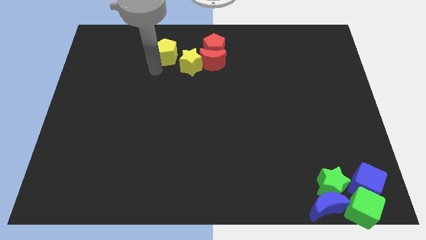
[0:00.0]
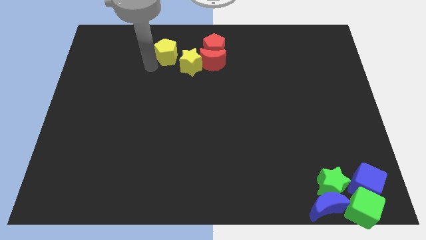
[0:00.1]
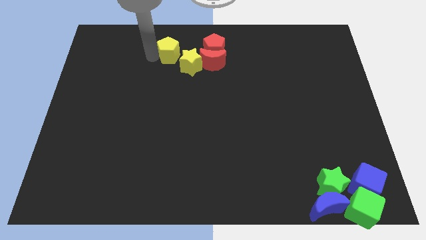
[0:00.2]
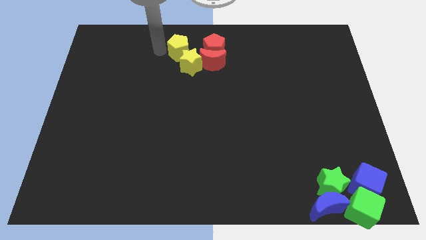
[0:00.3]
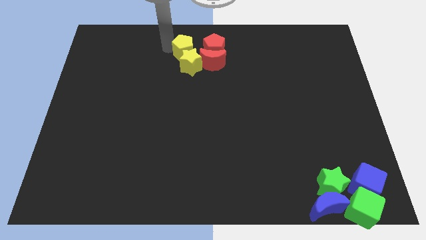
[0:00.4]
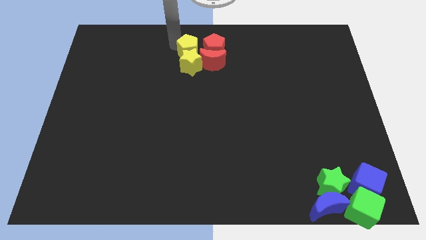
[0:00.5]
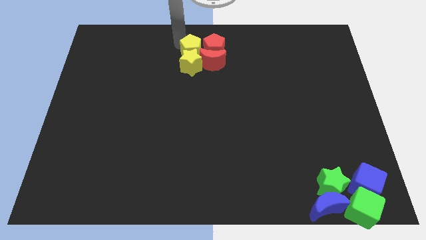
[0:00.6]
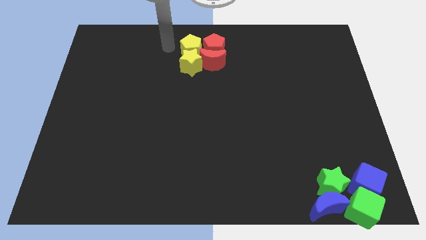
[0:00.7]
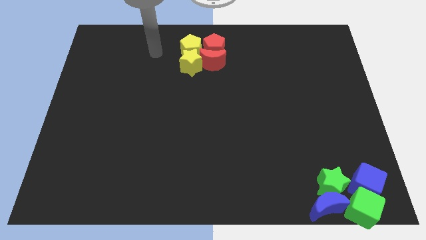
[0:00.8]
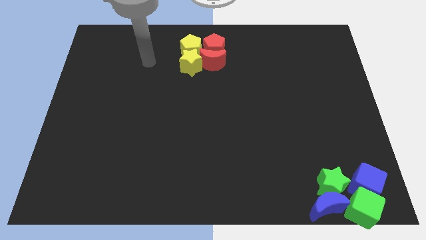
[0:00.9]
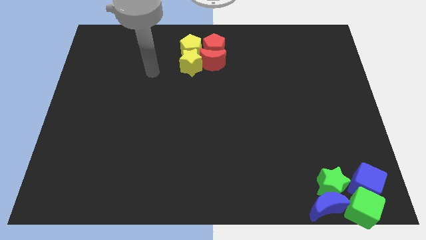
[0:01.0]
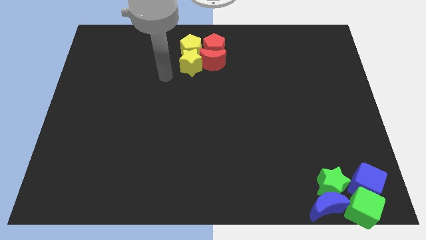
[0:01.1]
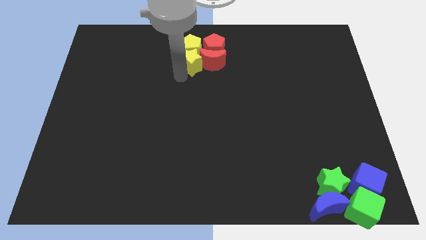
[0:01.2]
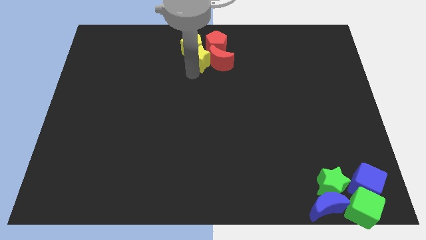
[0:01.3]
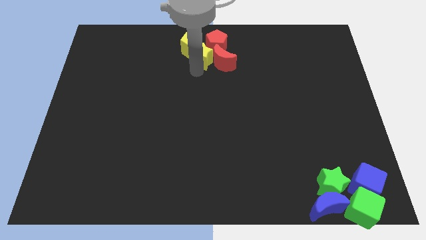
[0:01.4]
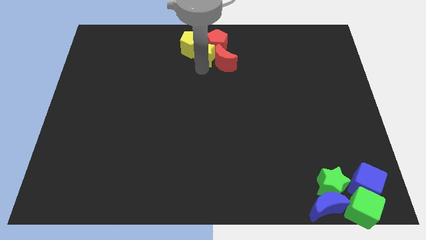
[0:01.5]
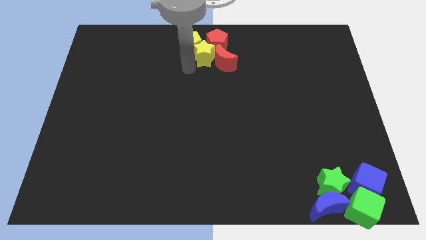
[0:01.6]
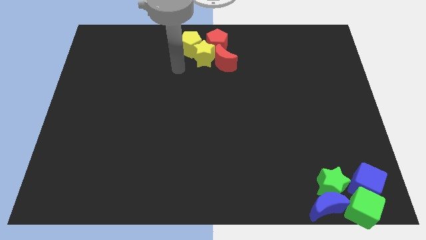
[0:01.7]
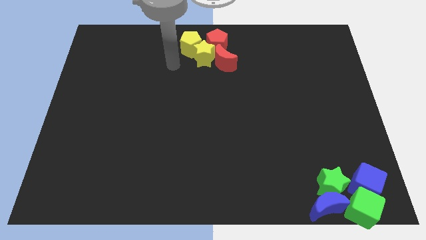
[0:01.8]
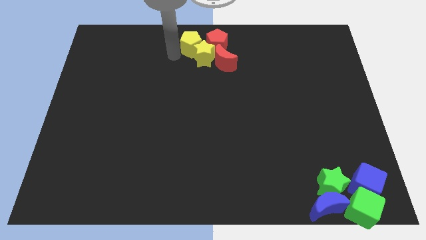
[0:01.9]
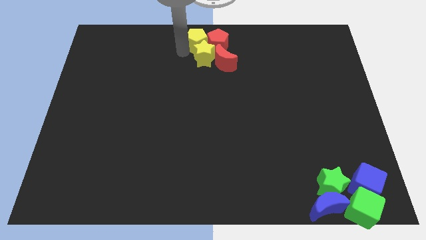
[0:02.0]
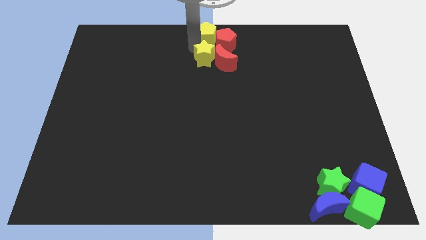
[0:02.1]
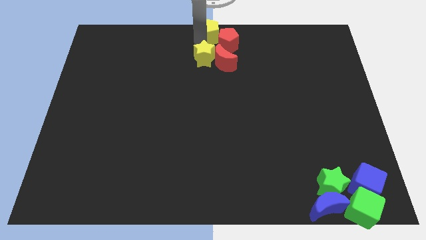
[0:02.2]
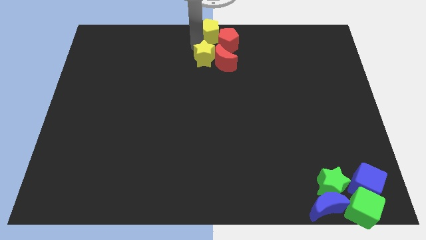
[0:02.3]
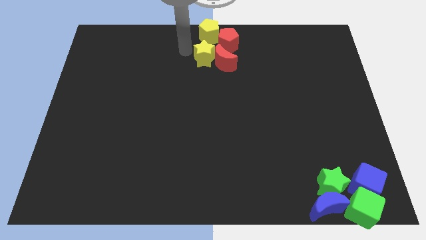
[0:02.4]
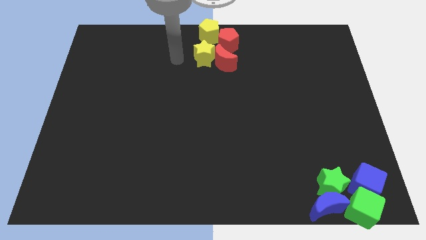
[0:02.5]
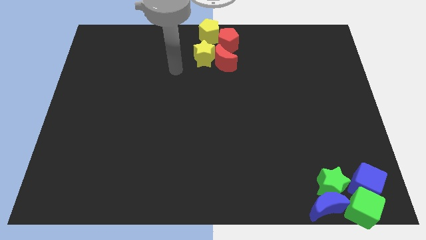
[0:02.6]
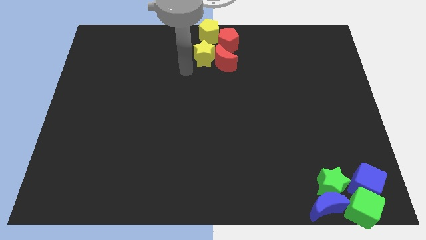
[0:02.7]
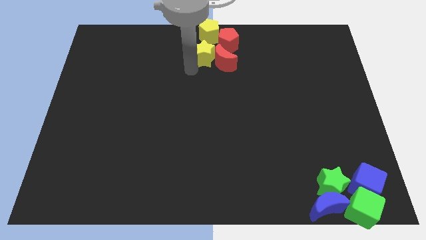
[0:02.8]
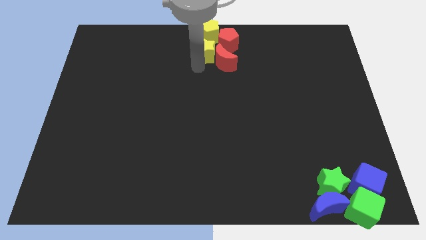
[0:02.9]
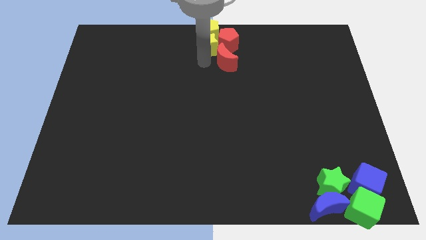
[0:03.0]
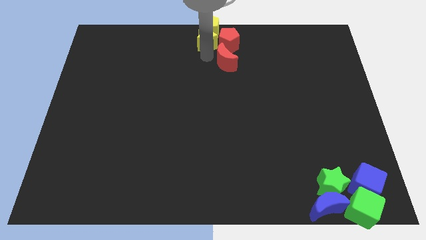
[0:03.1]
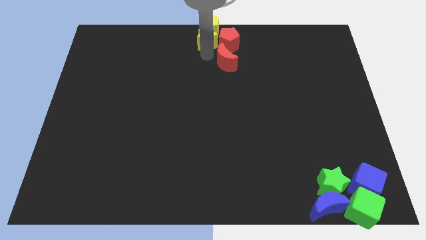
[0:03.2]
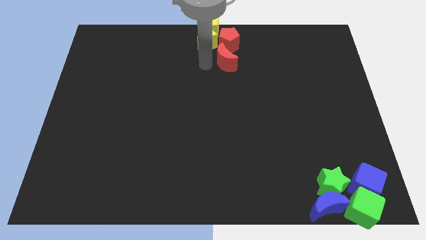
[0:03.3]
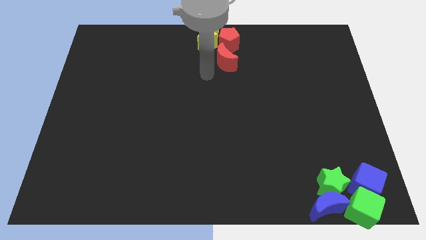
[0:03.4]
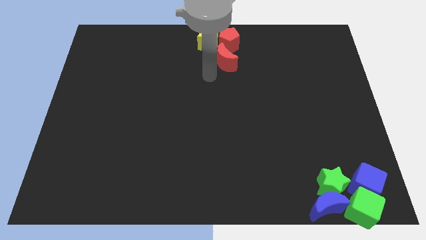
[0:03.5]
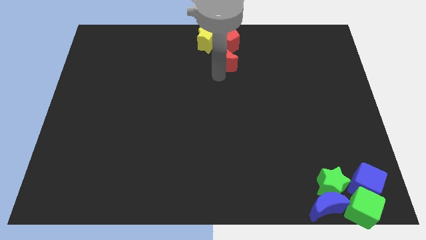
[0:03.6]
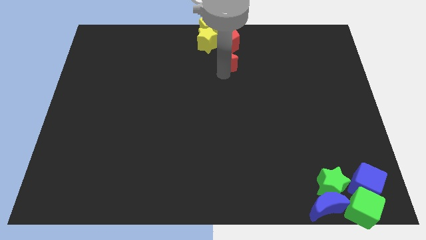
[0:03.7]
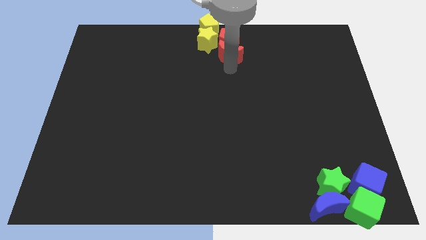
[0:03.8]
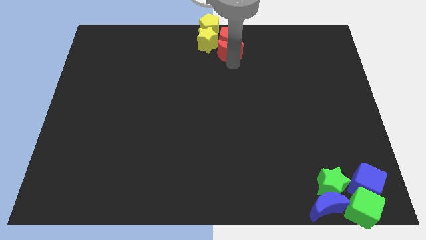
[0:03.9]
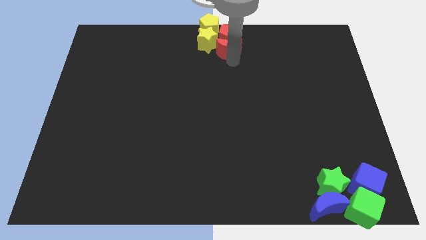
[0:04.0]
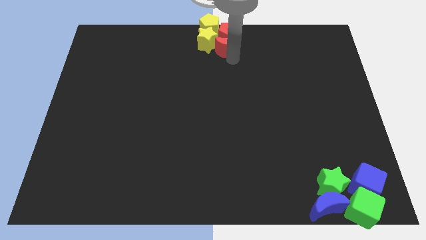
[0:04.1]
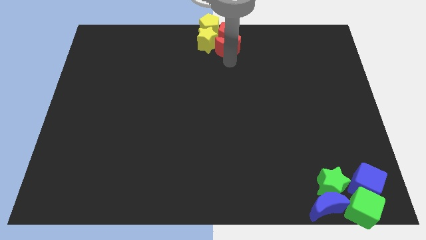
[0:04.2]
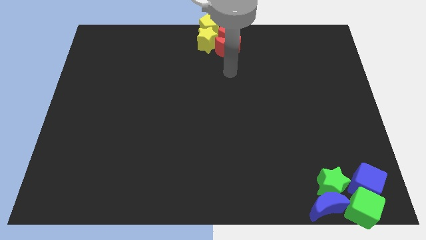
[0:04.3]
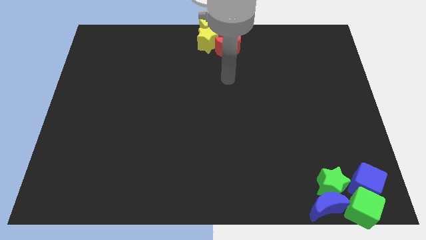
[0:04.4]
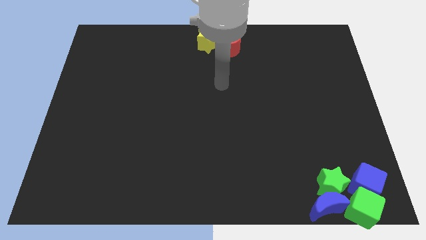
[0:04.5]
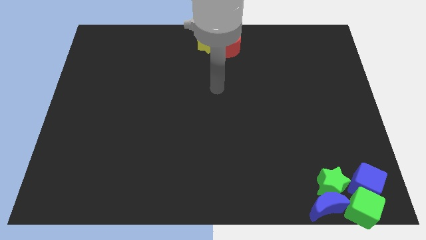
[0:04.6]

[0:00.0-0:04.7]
move the group of yellow and red blocks to the top center of the board

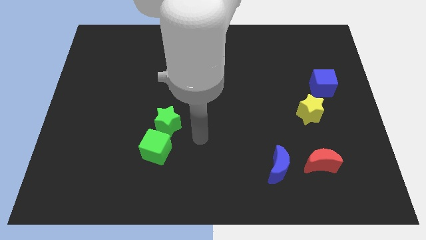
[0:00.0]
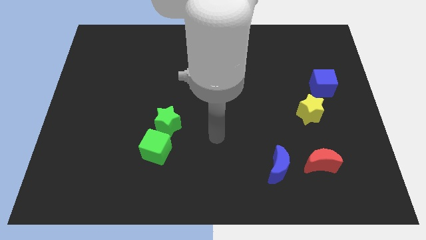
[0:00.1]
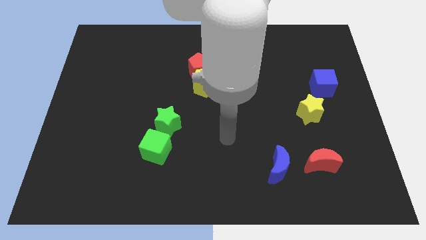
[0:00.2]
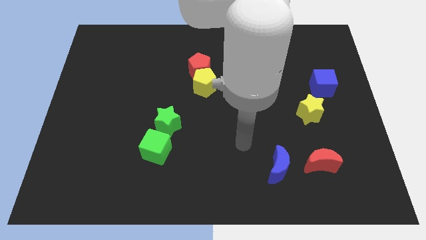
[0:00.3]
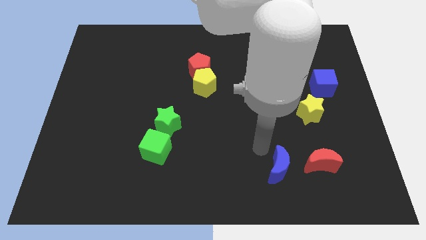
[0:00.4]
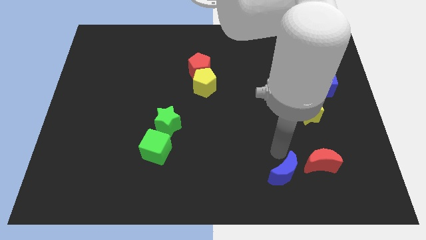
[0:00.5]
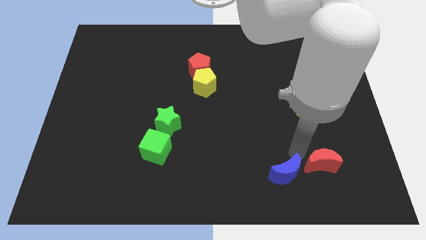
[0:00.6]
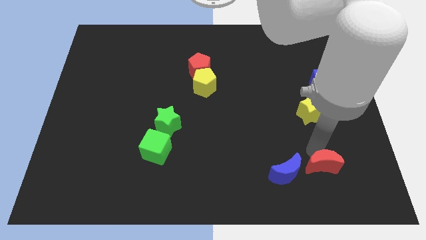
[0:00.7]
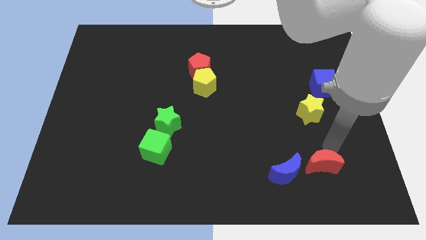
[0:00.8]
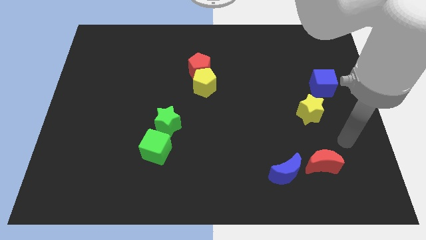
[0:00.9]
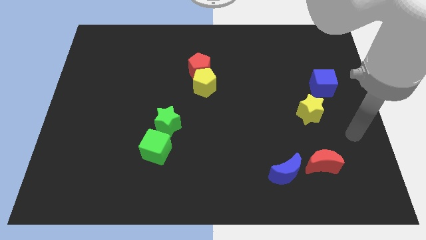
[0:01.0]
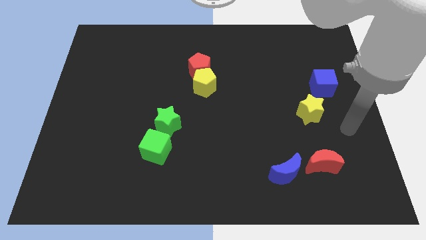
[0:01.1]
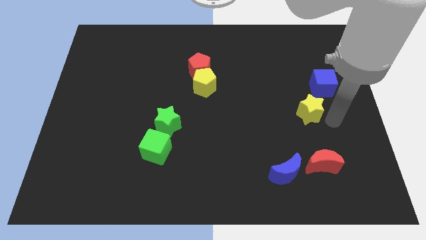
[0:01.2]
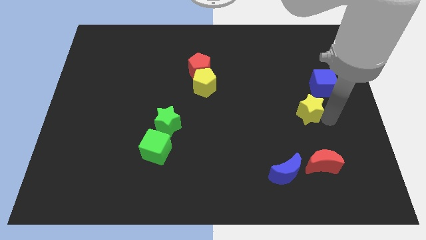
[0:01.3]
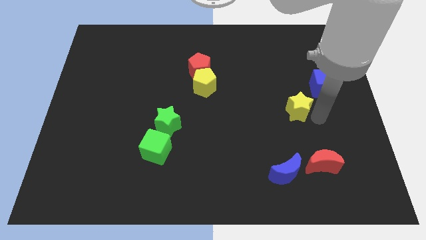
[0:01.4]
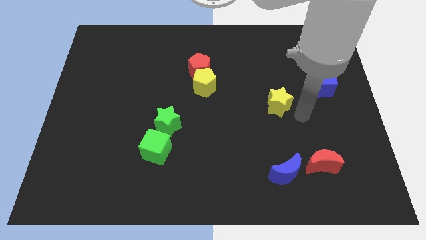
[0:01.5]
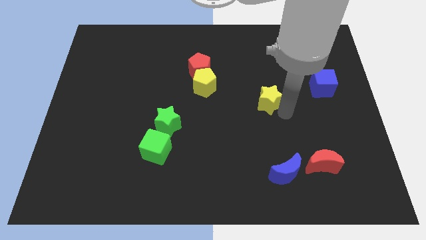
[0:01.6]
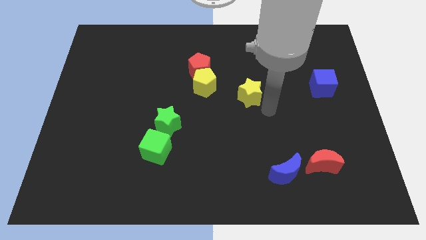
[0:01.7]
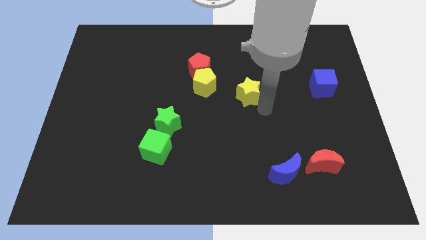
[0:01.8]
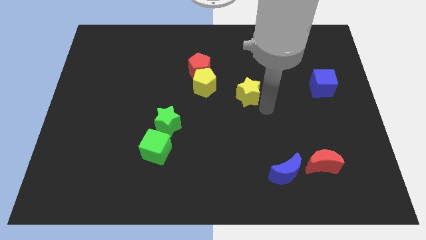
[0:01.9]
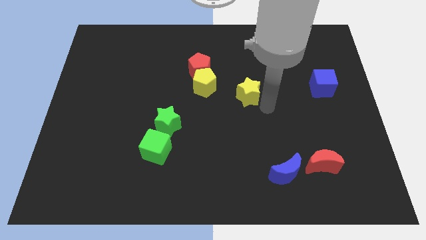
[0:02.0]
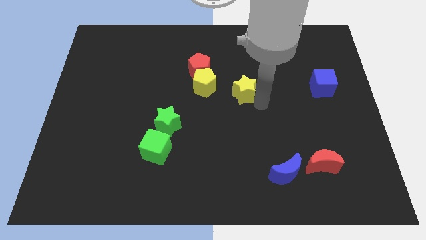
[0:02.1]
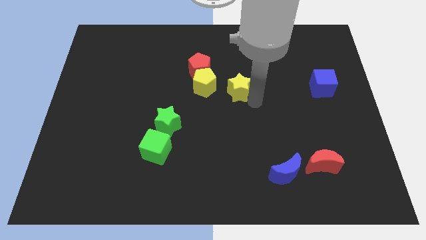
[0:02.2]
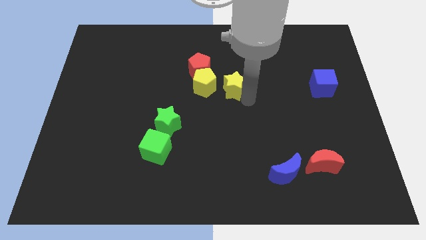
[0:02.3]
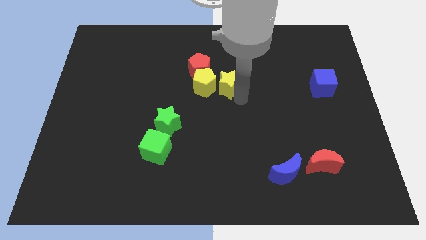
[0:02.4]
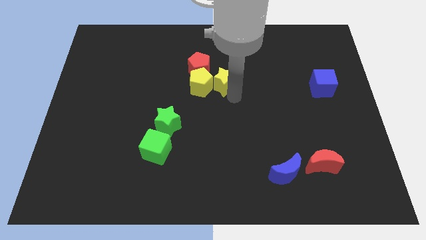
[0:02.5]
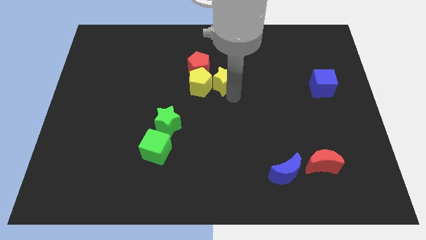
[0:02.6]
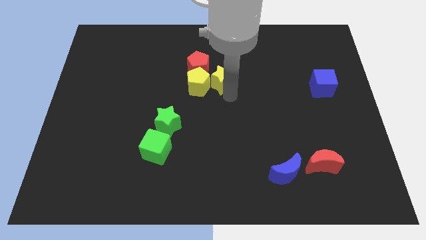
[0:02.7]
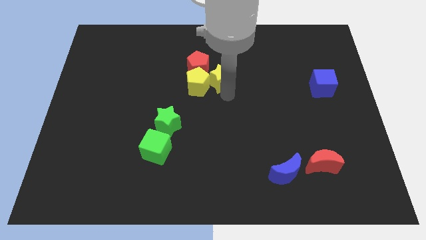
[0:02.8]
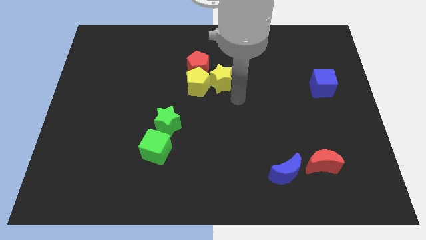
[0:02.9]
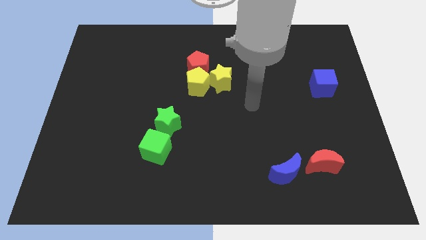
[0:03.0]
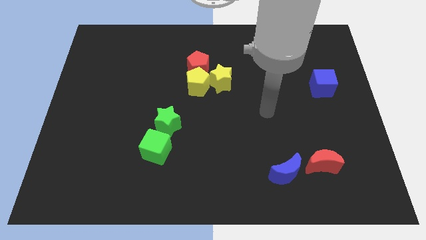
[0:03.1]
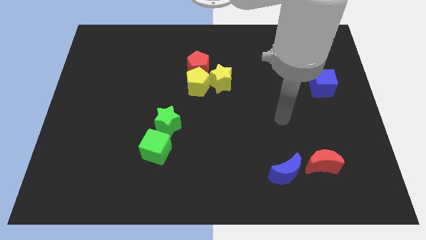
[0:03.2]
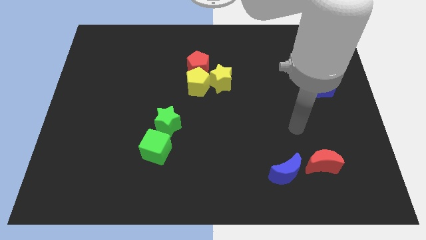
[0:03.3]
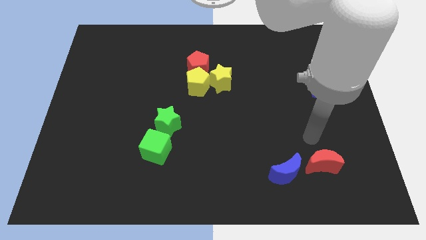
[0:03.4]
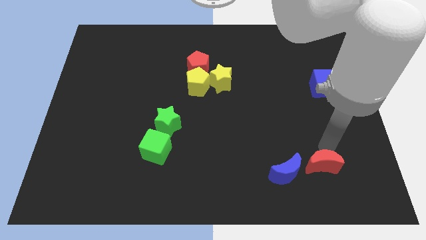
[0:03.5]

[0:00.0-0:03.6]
move yellow star into the yellow pentagon

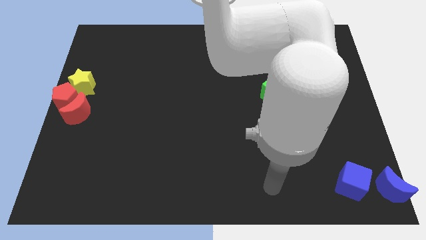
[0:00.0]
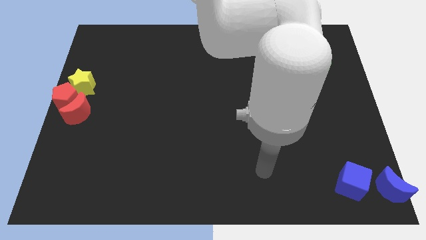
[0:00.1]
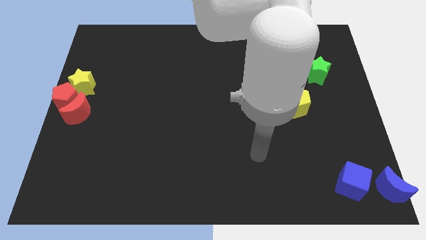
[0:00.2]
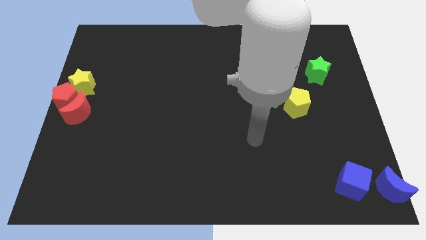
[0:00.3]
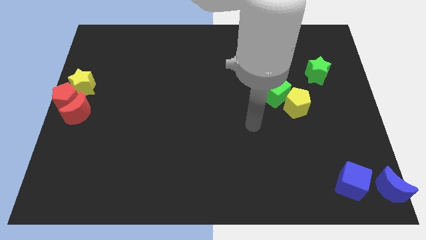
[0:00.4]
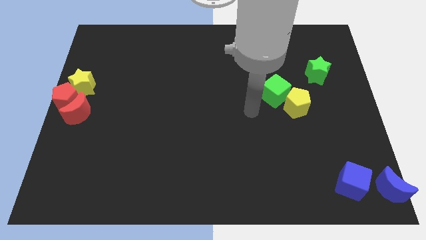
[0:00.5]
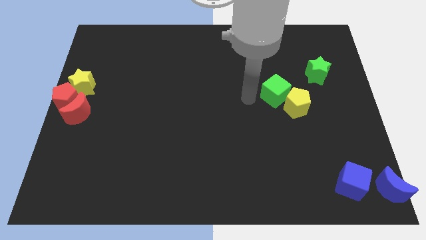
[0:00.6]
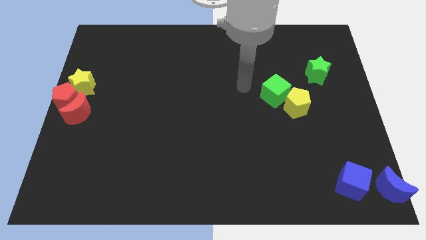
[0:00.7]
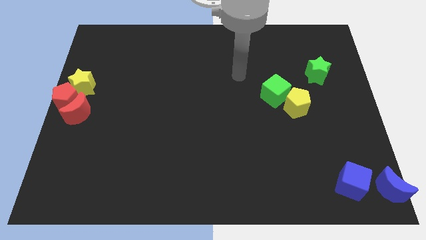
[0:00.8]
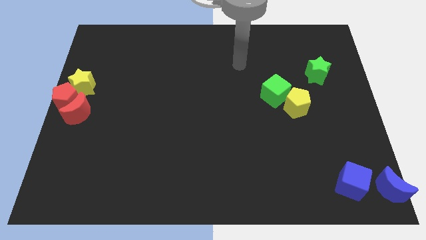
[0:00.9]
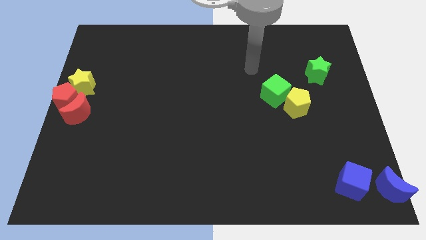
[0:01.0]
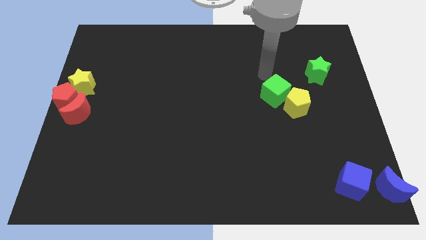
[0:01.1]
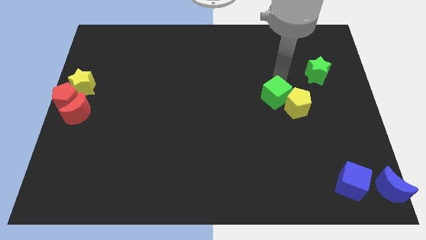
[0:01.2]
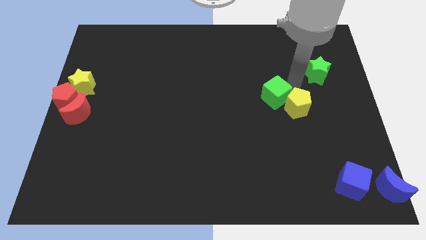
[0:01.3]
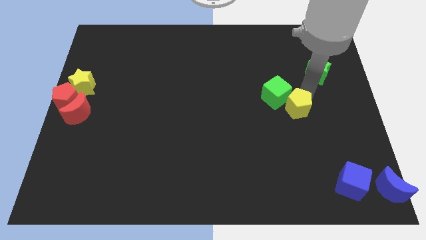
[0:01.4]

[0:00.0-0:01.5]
touch the right top of the yellow pentagon
